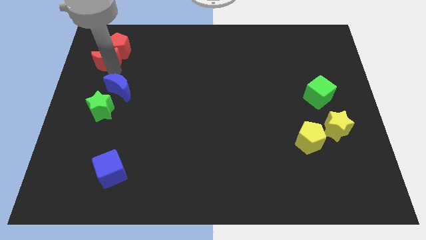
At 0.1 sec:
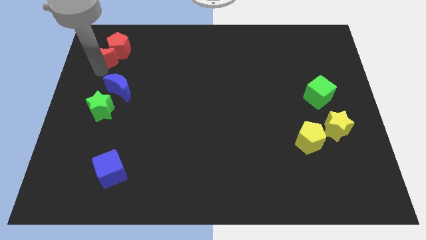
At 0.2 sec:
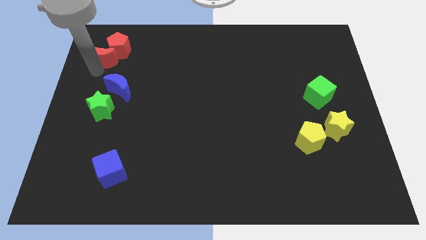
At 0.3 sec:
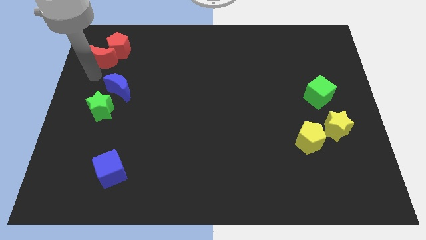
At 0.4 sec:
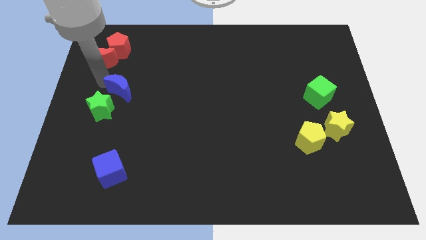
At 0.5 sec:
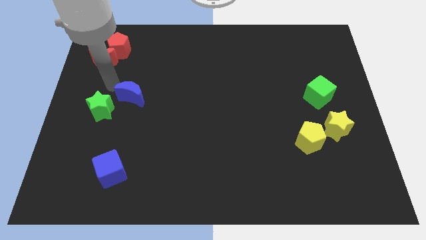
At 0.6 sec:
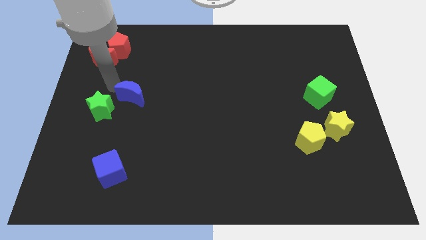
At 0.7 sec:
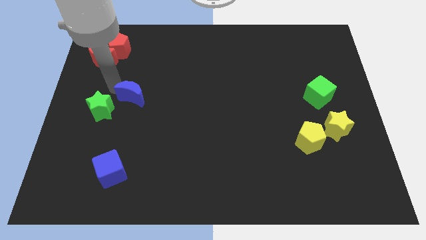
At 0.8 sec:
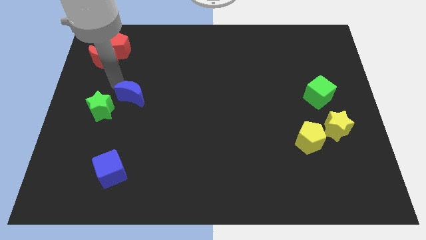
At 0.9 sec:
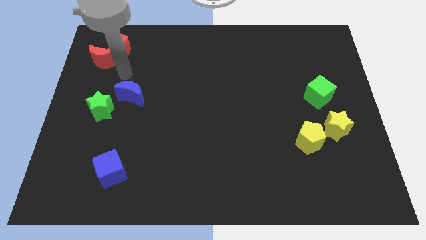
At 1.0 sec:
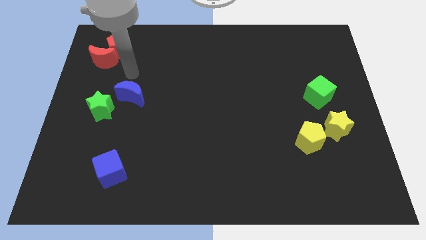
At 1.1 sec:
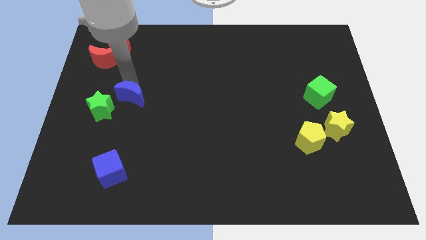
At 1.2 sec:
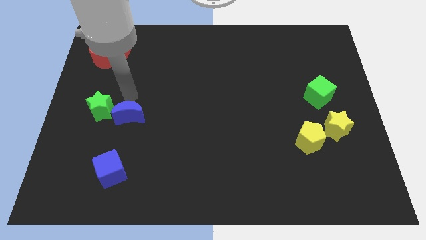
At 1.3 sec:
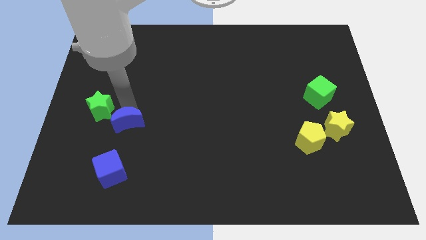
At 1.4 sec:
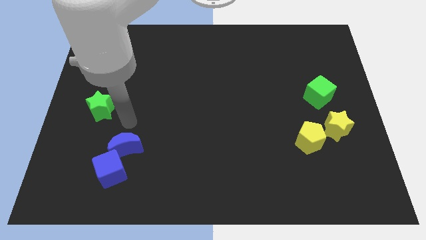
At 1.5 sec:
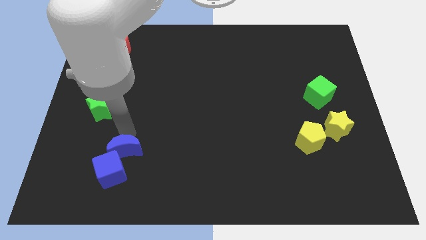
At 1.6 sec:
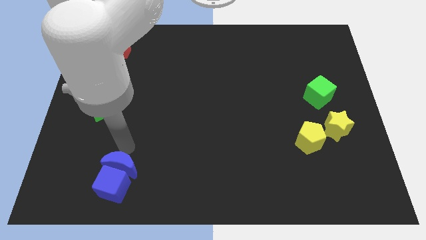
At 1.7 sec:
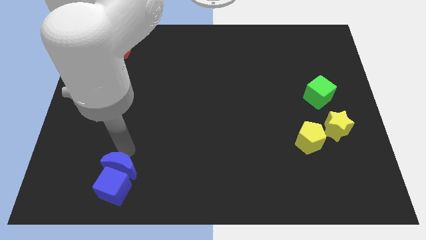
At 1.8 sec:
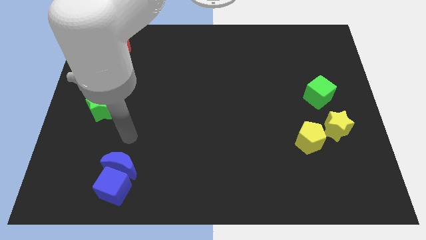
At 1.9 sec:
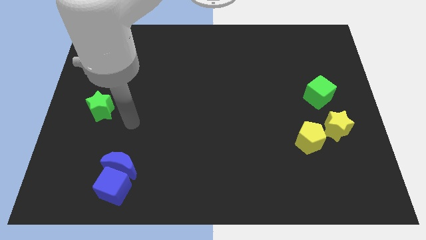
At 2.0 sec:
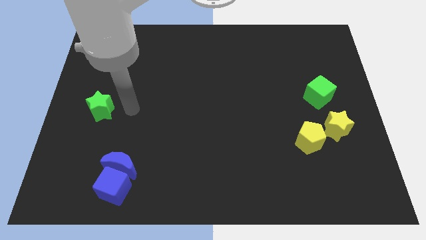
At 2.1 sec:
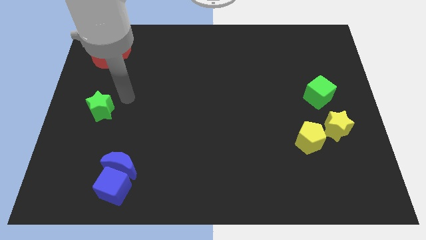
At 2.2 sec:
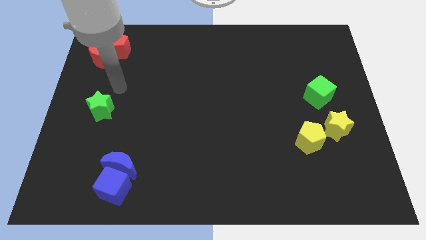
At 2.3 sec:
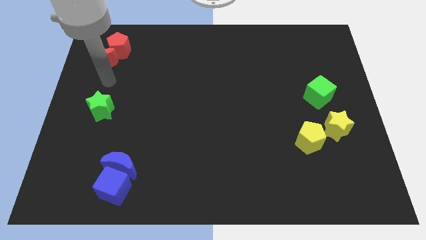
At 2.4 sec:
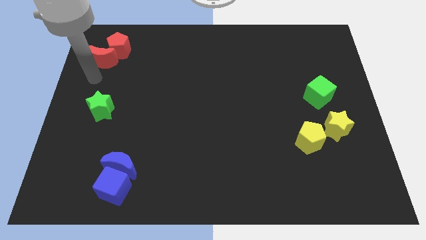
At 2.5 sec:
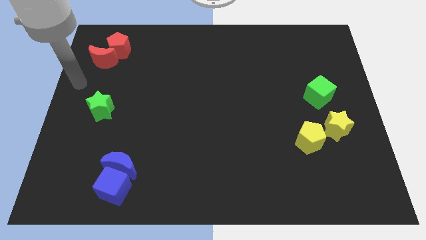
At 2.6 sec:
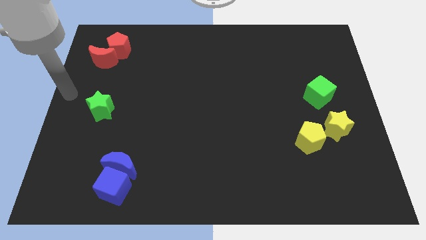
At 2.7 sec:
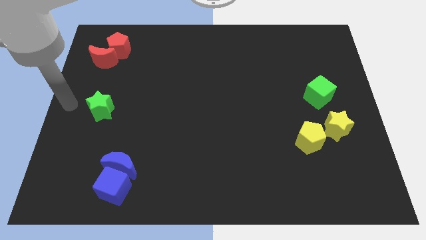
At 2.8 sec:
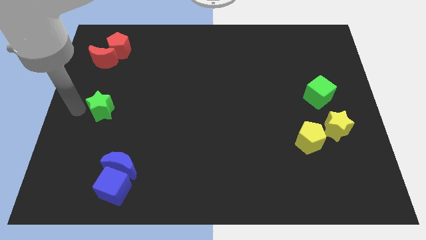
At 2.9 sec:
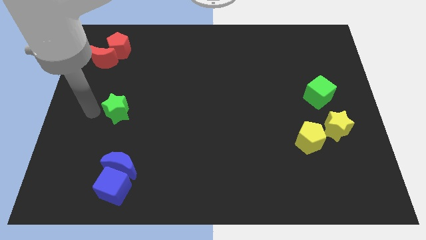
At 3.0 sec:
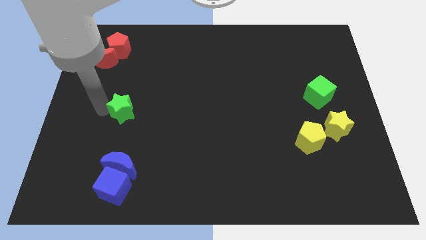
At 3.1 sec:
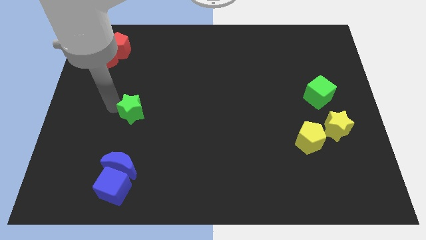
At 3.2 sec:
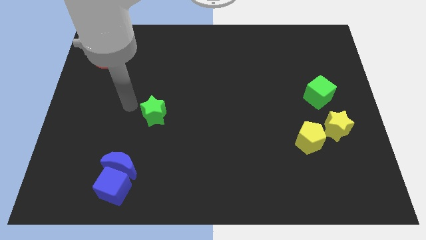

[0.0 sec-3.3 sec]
move the blue crescent and green star diagonally on the top right side of the blue cube

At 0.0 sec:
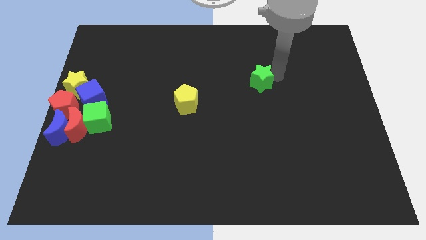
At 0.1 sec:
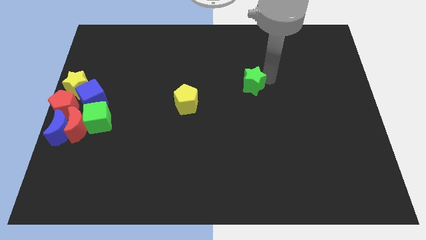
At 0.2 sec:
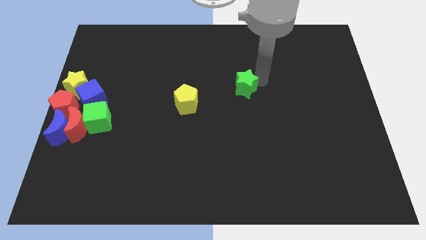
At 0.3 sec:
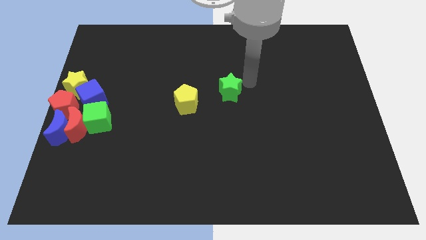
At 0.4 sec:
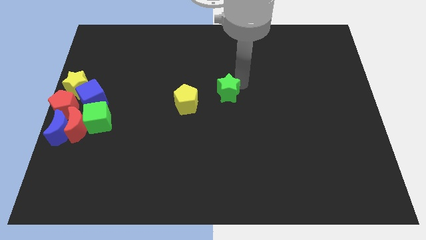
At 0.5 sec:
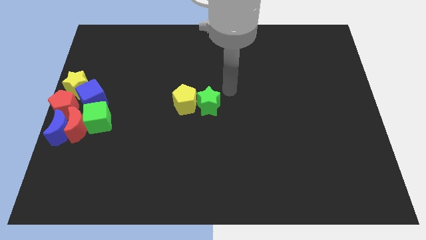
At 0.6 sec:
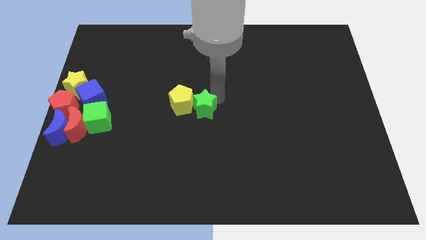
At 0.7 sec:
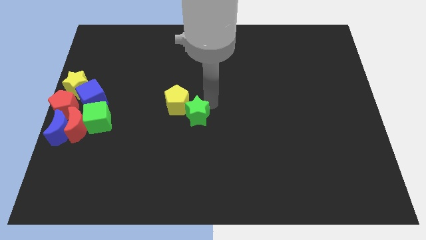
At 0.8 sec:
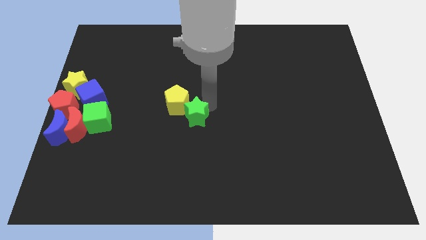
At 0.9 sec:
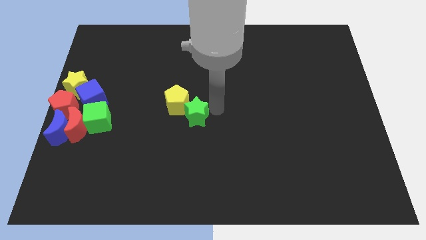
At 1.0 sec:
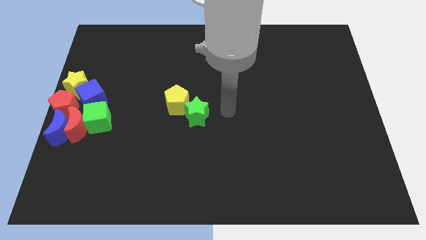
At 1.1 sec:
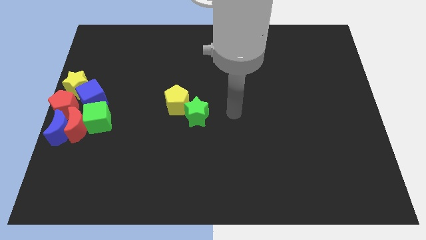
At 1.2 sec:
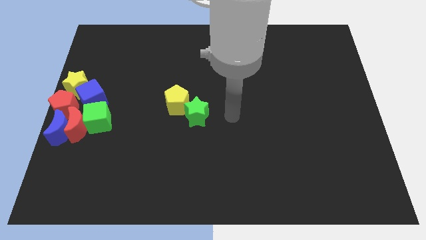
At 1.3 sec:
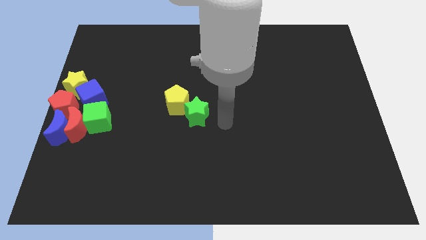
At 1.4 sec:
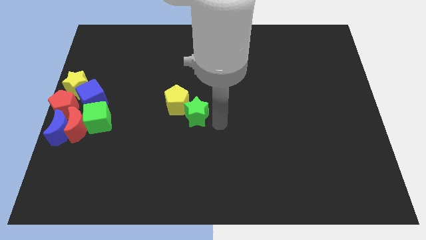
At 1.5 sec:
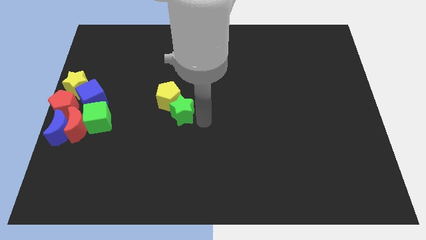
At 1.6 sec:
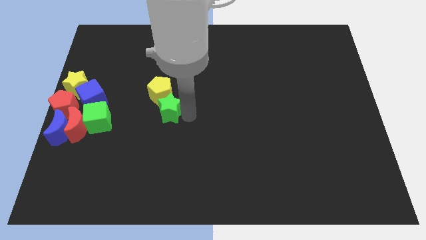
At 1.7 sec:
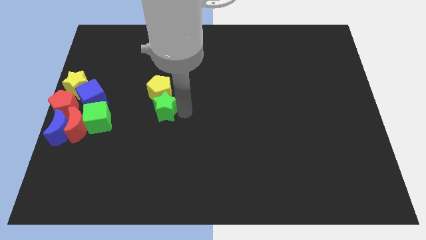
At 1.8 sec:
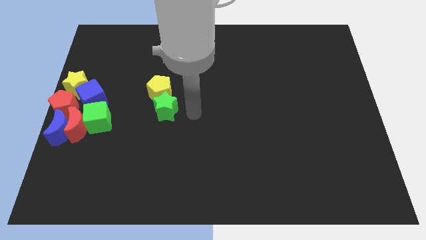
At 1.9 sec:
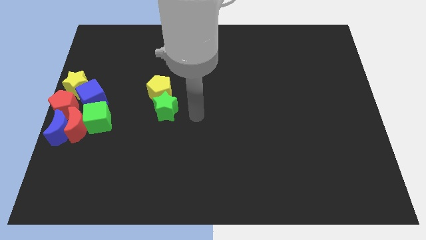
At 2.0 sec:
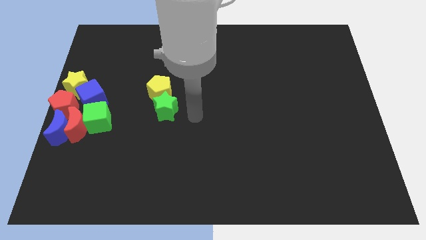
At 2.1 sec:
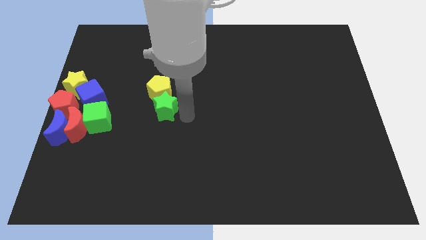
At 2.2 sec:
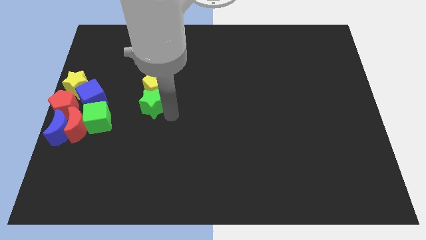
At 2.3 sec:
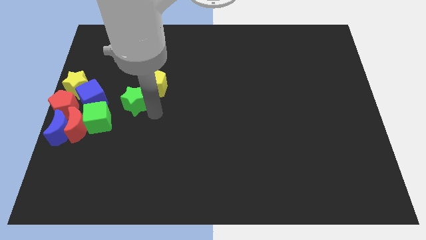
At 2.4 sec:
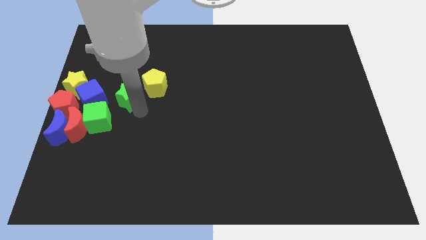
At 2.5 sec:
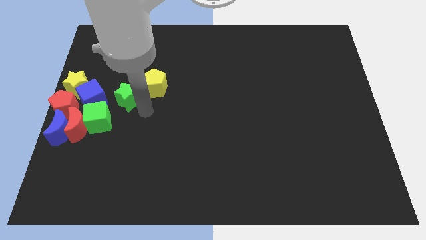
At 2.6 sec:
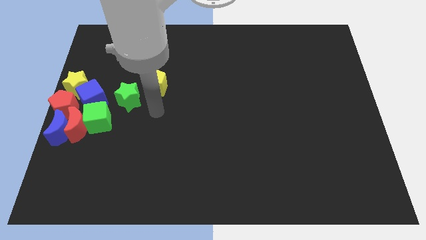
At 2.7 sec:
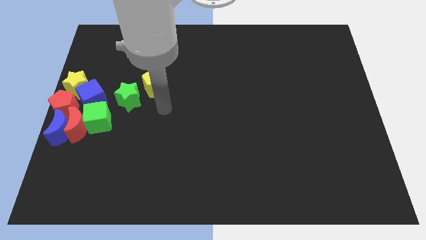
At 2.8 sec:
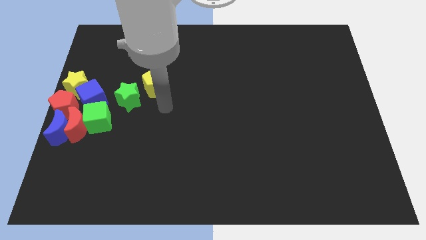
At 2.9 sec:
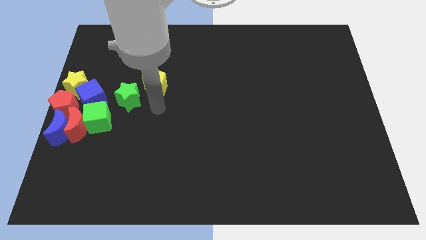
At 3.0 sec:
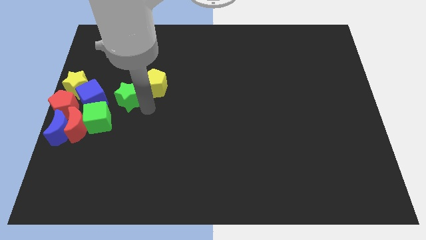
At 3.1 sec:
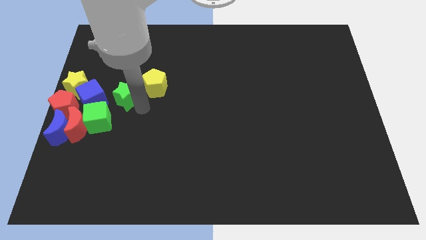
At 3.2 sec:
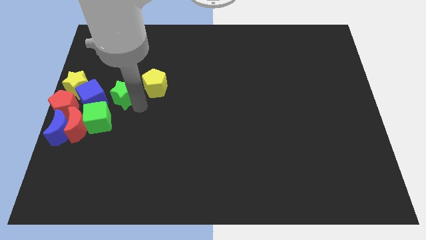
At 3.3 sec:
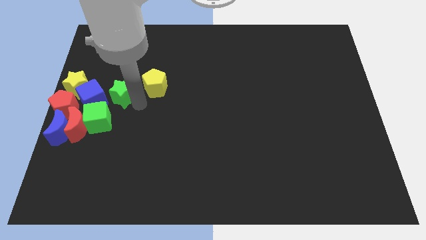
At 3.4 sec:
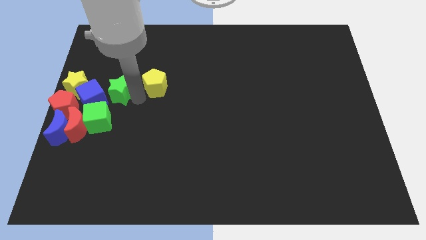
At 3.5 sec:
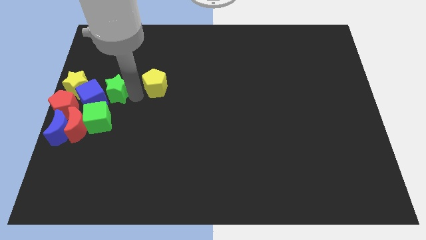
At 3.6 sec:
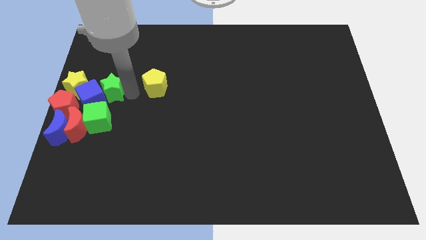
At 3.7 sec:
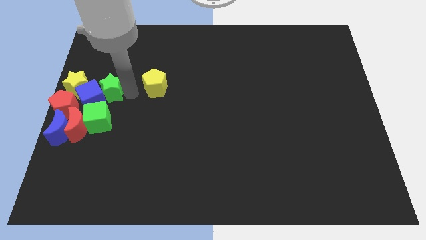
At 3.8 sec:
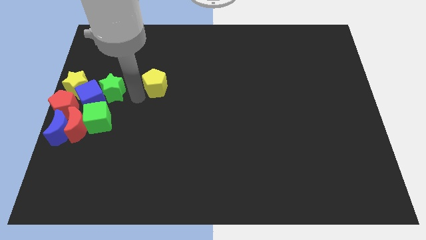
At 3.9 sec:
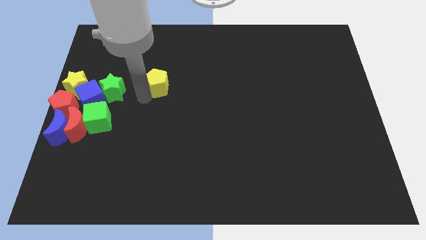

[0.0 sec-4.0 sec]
place the green star into the group of blocks

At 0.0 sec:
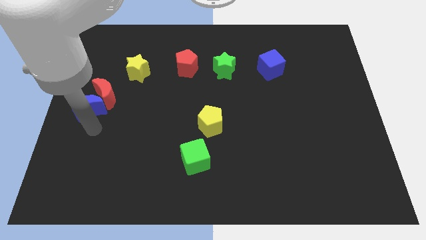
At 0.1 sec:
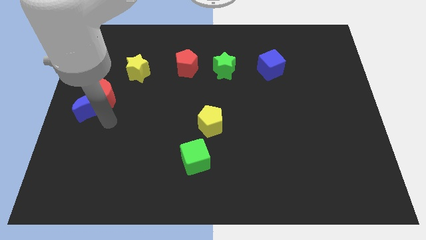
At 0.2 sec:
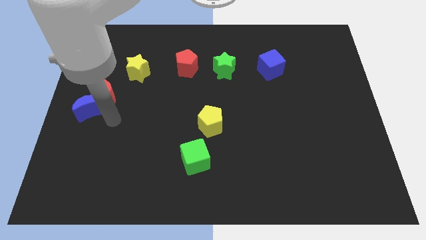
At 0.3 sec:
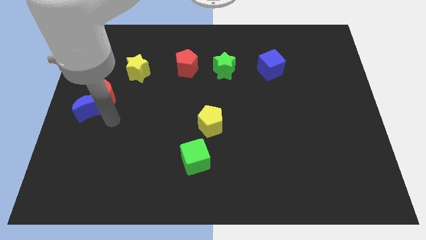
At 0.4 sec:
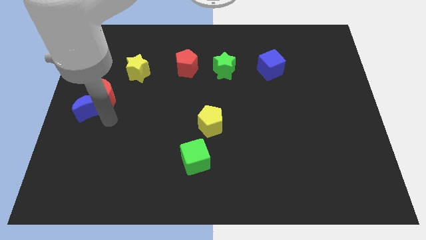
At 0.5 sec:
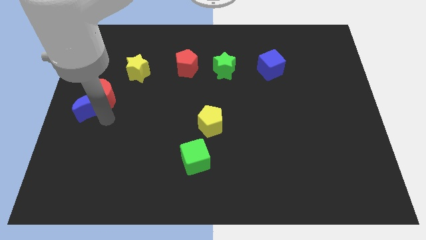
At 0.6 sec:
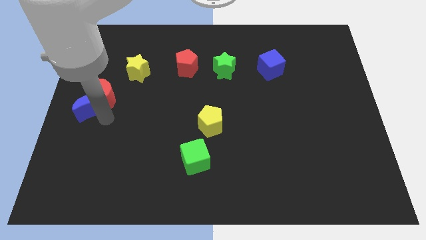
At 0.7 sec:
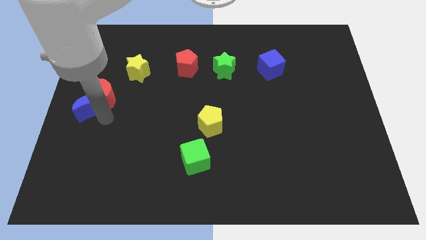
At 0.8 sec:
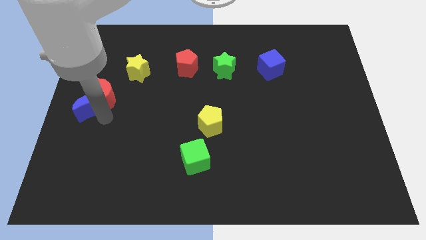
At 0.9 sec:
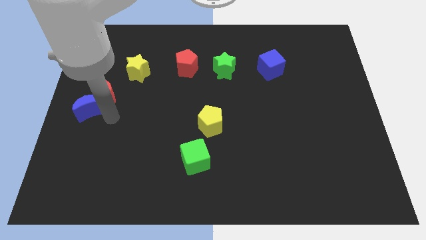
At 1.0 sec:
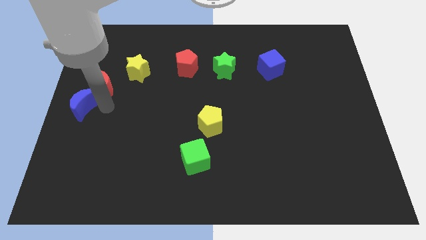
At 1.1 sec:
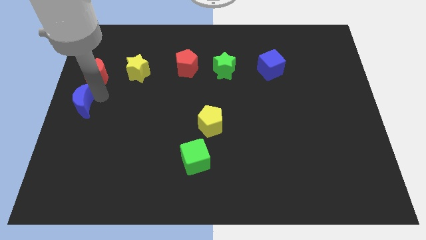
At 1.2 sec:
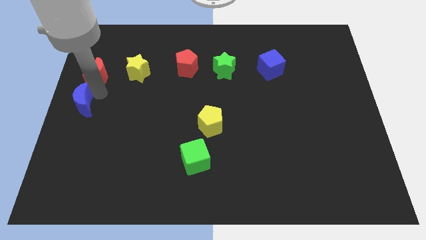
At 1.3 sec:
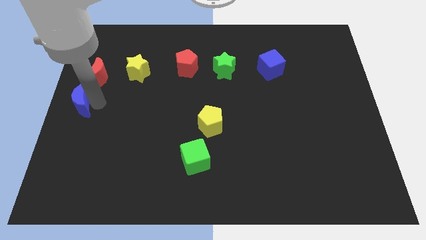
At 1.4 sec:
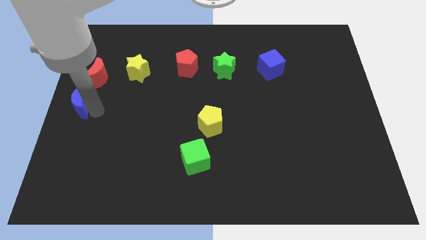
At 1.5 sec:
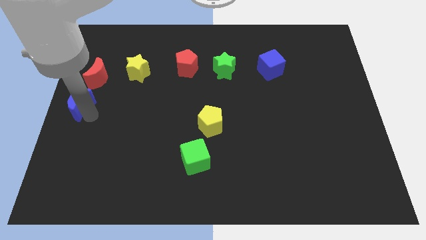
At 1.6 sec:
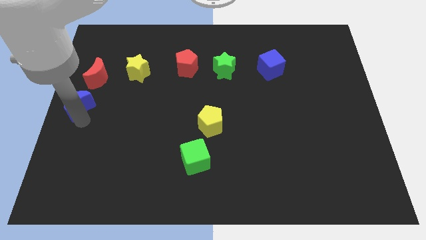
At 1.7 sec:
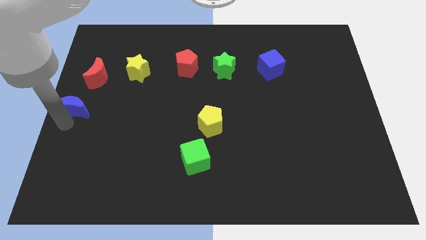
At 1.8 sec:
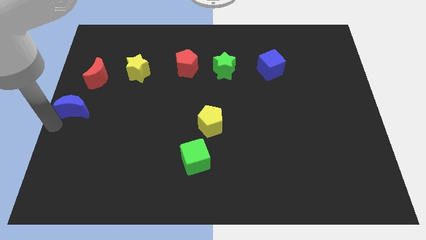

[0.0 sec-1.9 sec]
drag blue moon towards middle left side of the board
